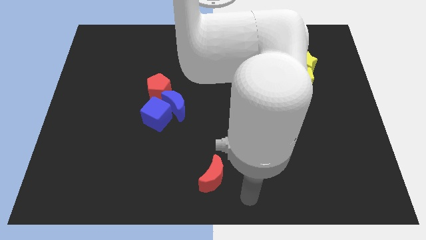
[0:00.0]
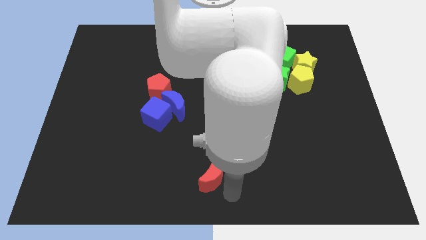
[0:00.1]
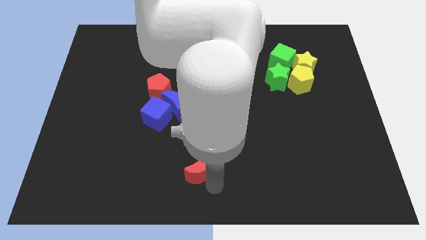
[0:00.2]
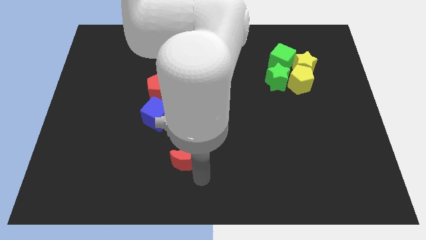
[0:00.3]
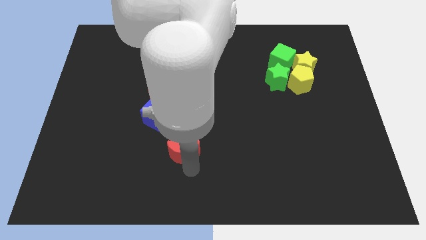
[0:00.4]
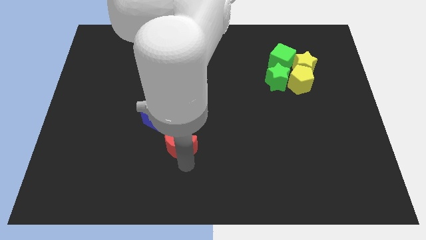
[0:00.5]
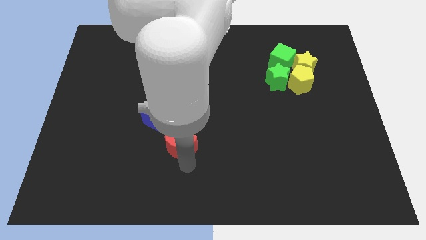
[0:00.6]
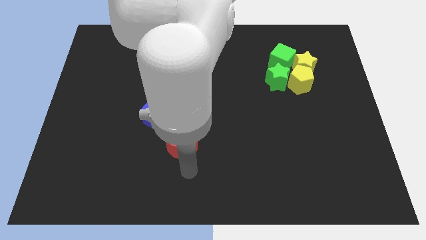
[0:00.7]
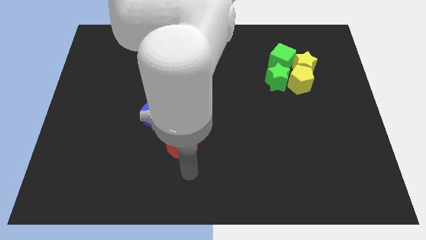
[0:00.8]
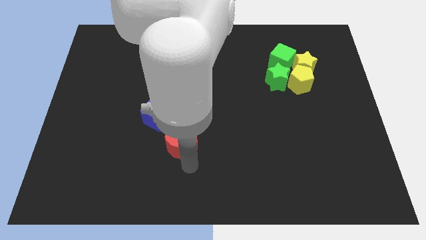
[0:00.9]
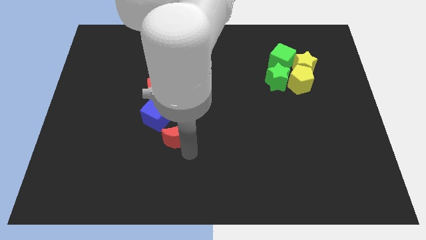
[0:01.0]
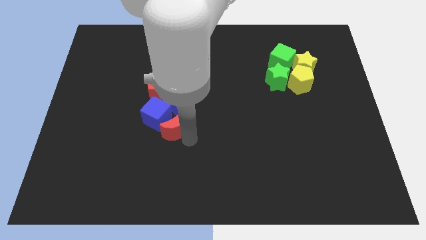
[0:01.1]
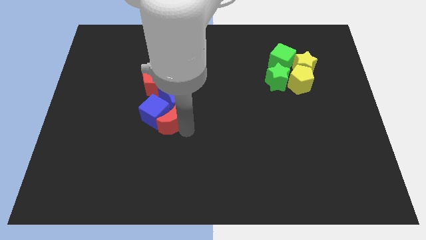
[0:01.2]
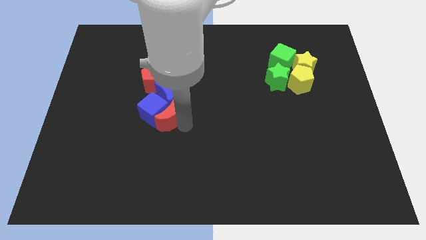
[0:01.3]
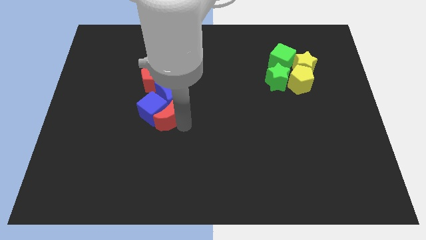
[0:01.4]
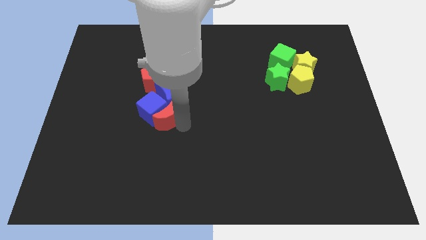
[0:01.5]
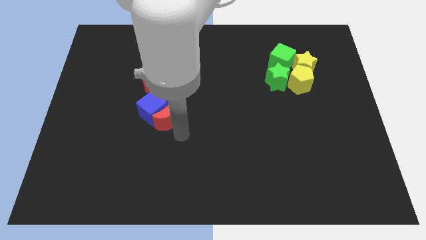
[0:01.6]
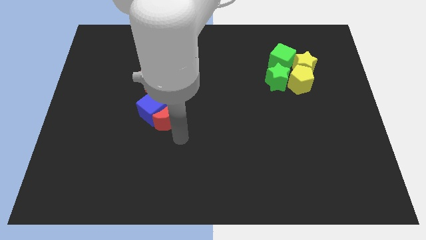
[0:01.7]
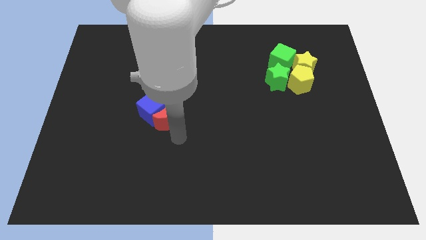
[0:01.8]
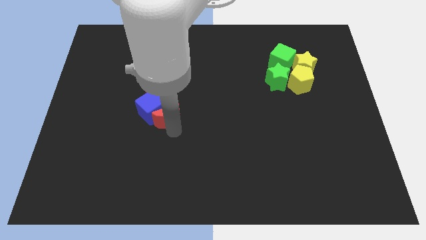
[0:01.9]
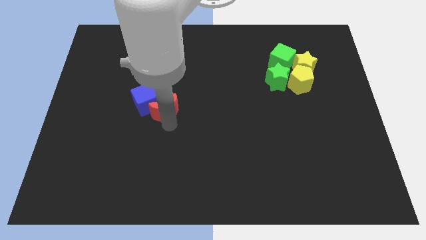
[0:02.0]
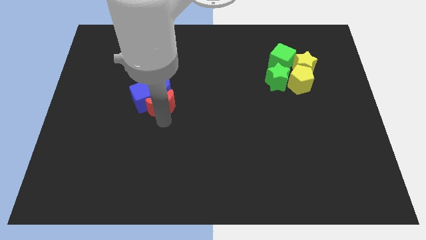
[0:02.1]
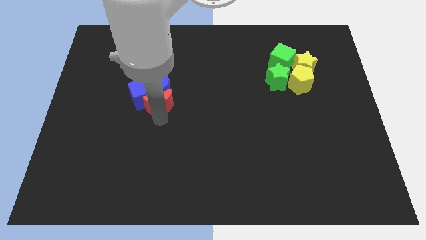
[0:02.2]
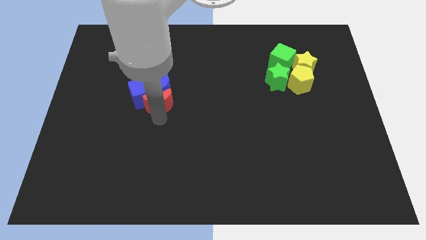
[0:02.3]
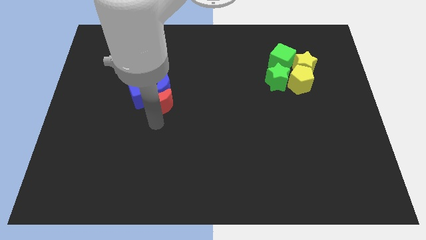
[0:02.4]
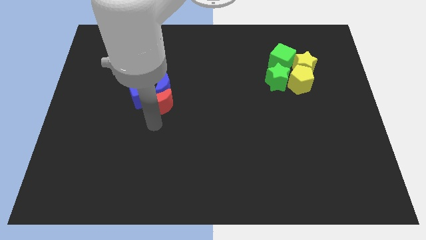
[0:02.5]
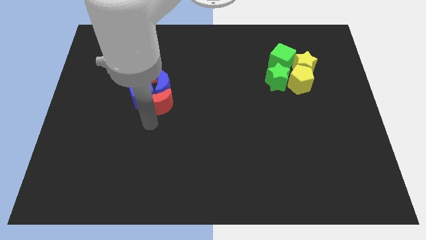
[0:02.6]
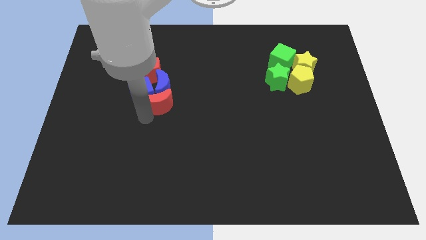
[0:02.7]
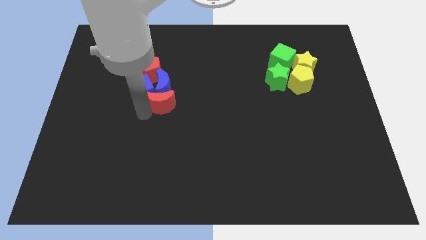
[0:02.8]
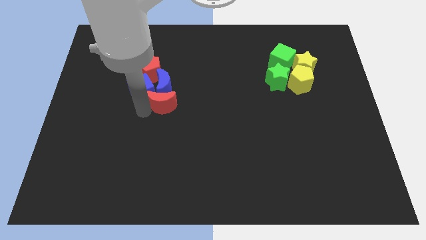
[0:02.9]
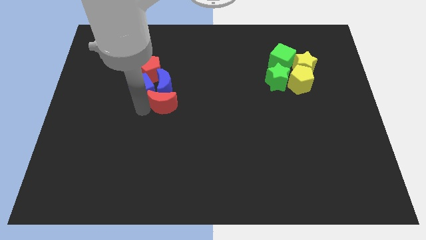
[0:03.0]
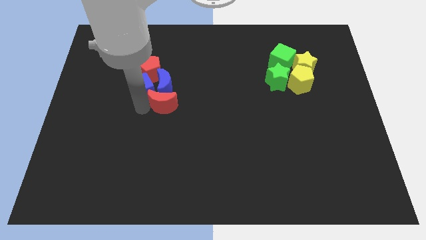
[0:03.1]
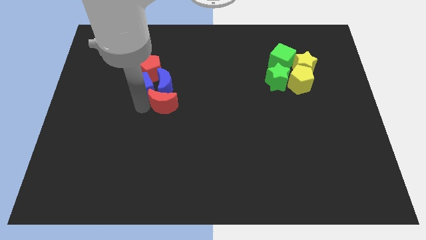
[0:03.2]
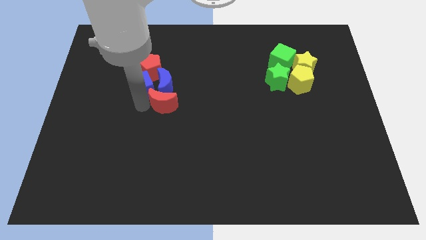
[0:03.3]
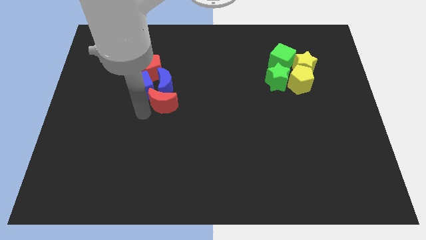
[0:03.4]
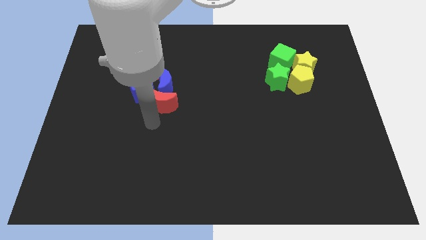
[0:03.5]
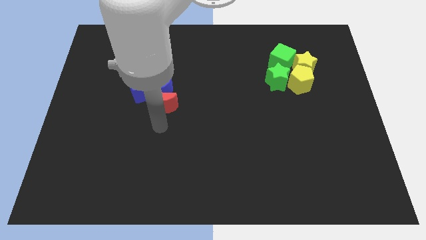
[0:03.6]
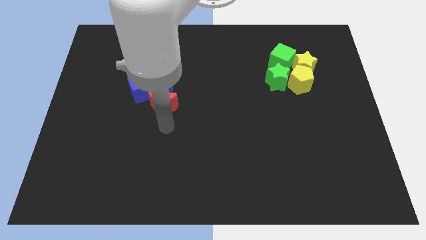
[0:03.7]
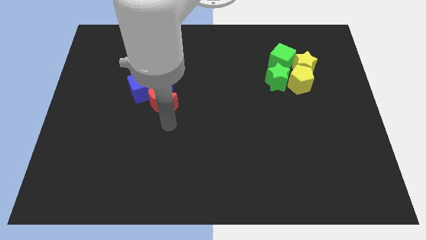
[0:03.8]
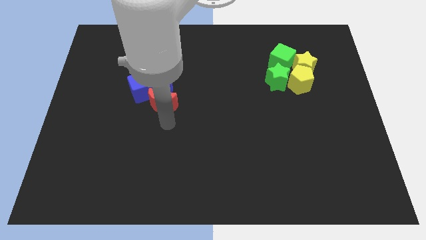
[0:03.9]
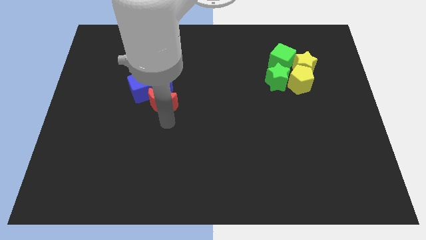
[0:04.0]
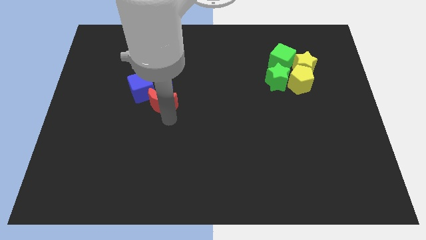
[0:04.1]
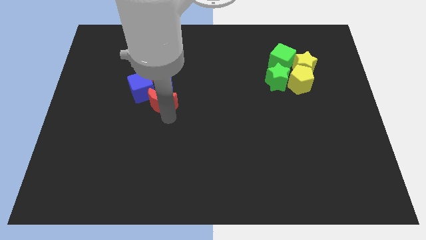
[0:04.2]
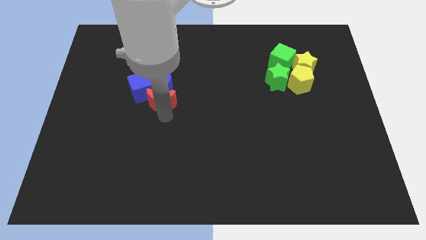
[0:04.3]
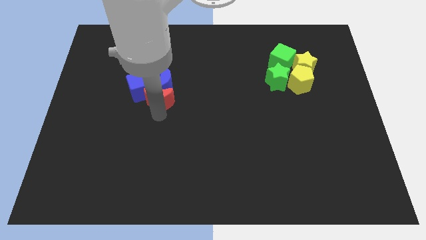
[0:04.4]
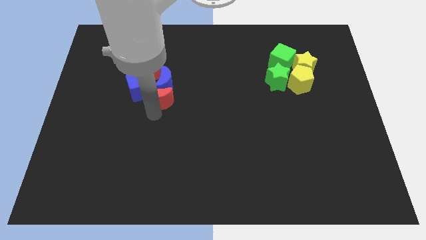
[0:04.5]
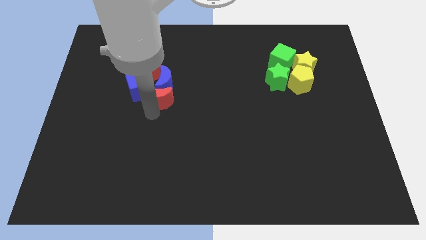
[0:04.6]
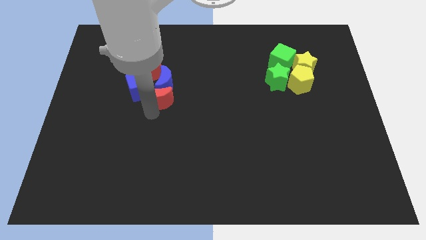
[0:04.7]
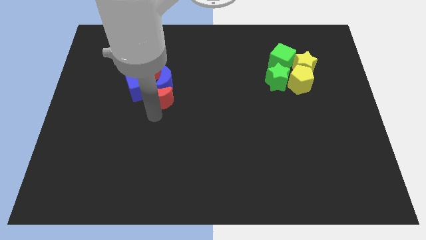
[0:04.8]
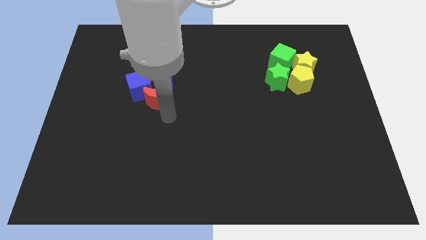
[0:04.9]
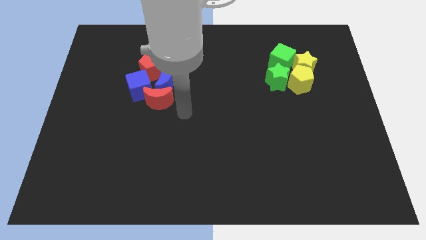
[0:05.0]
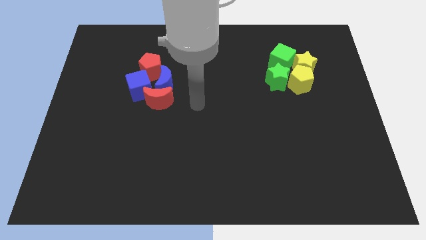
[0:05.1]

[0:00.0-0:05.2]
add the red crescent to the group of both blue blocks and red pentagon

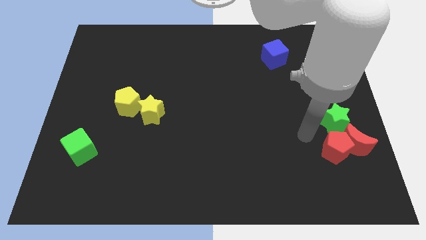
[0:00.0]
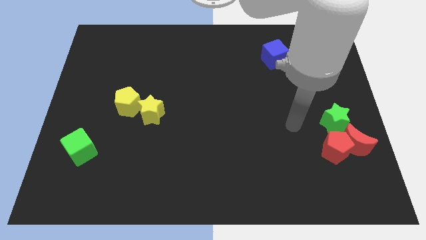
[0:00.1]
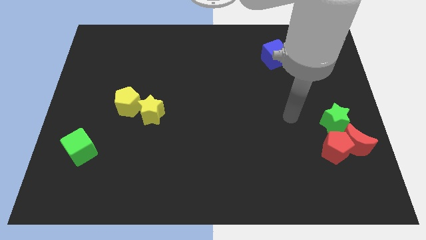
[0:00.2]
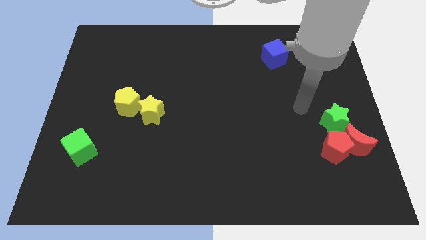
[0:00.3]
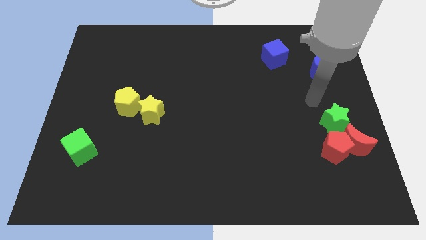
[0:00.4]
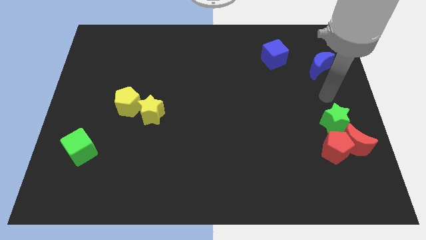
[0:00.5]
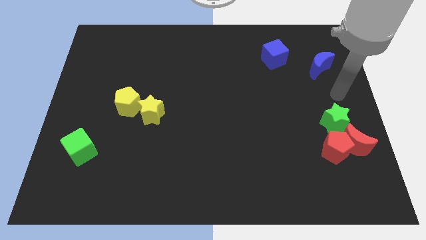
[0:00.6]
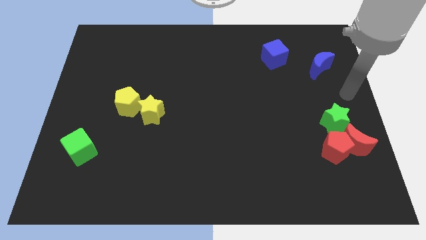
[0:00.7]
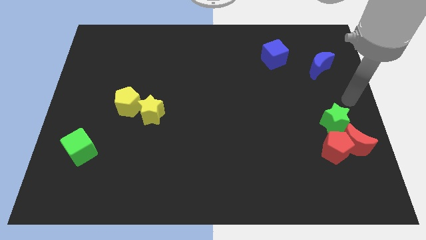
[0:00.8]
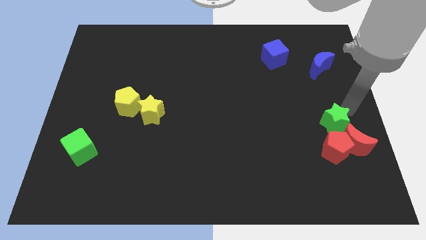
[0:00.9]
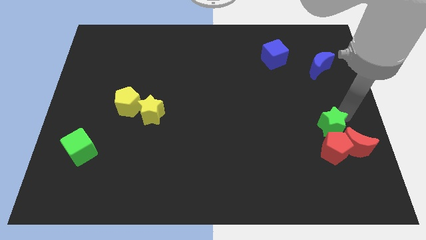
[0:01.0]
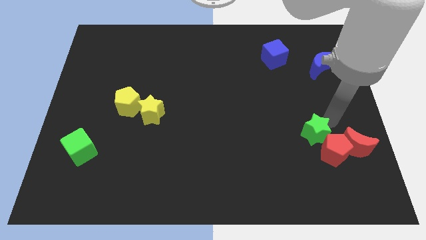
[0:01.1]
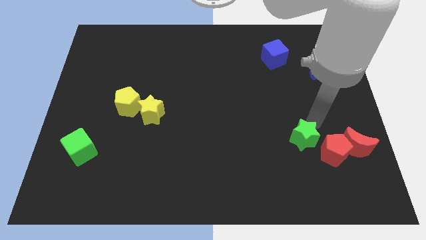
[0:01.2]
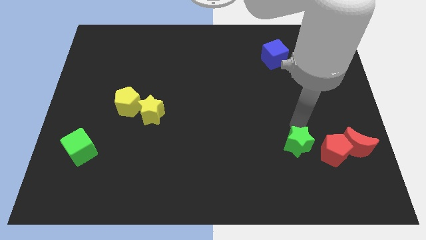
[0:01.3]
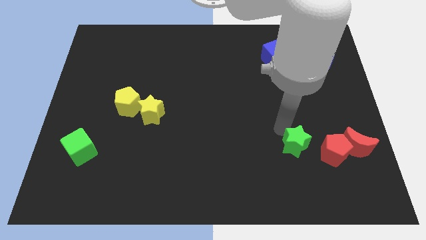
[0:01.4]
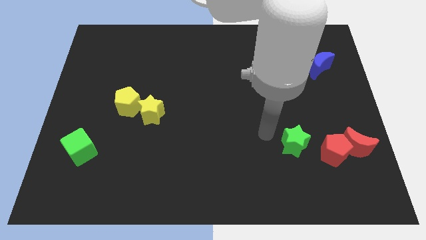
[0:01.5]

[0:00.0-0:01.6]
separate the green star from red blocks

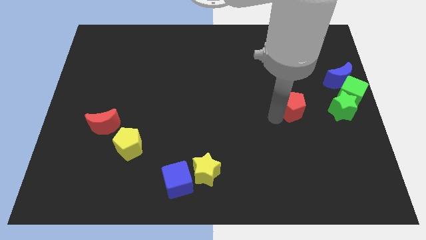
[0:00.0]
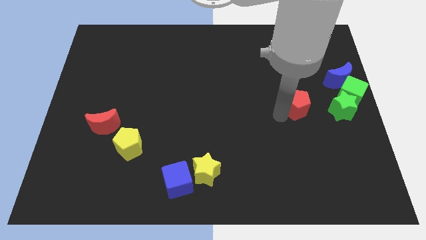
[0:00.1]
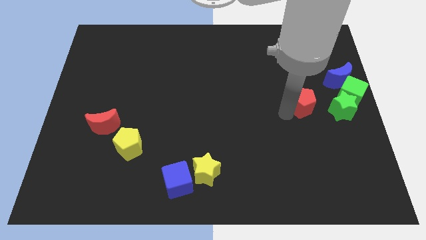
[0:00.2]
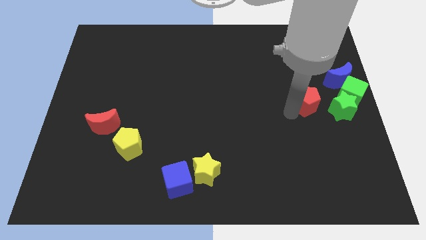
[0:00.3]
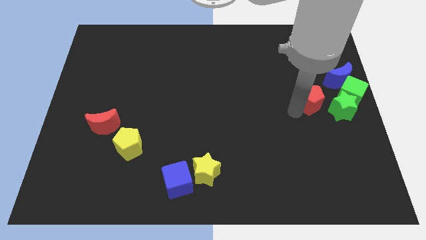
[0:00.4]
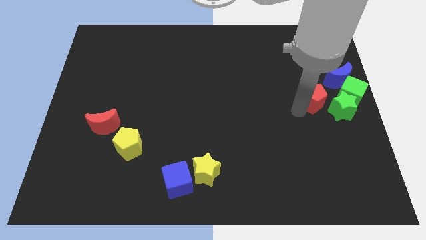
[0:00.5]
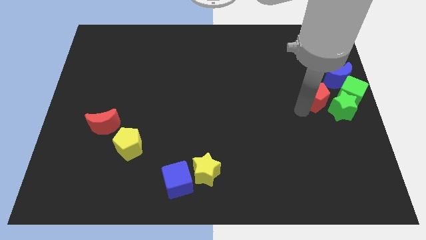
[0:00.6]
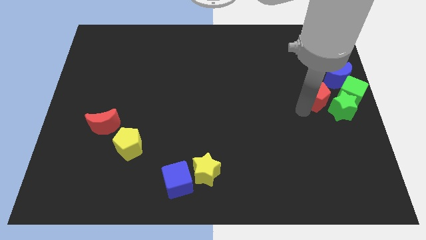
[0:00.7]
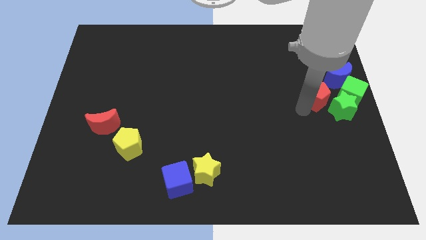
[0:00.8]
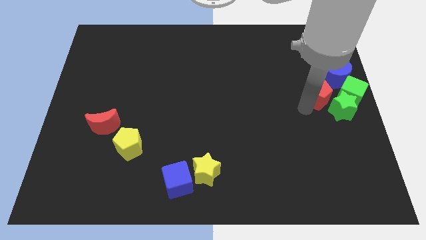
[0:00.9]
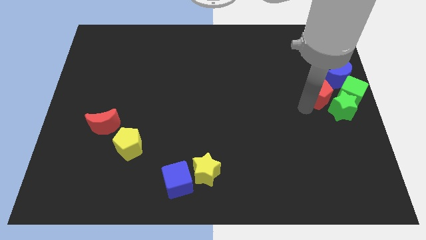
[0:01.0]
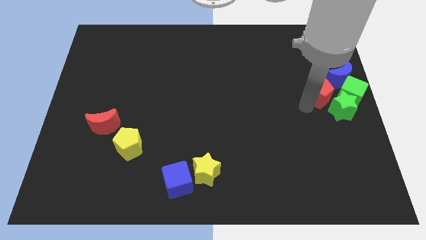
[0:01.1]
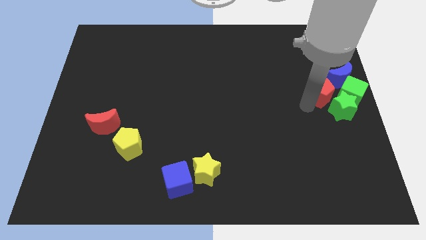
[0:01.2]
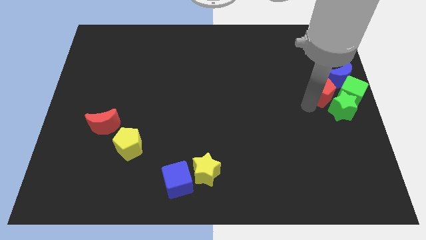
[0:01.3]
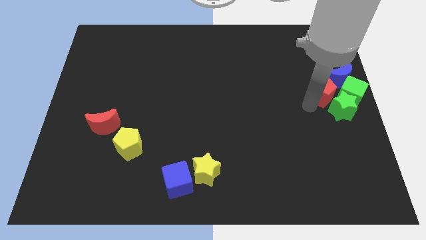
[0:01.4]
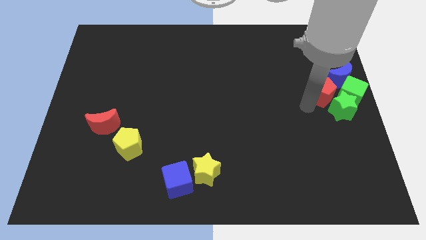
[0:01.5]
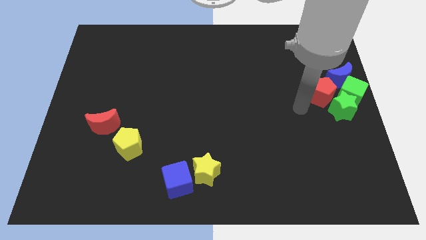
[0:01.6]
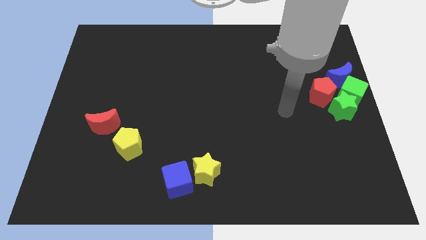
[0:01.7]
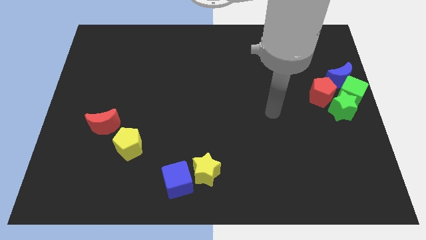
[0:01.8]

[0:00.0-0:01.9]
push the red pentagon to the left of the green cube

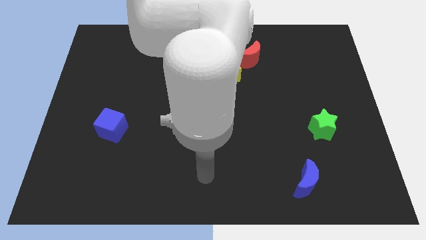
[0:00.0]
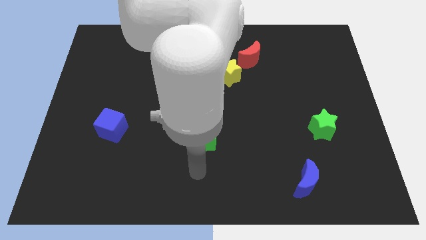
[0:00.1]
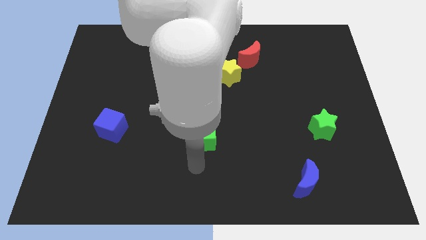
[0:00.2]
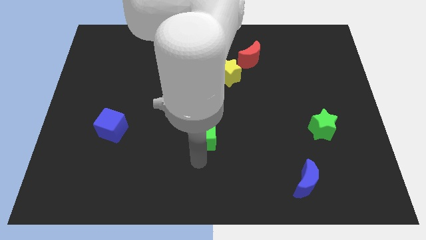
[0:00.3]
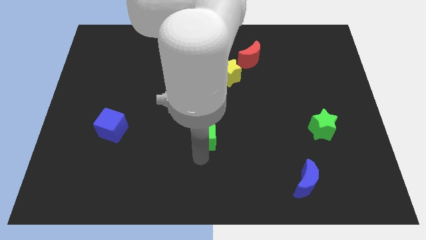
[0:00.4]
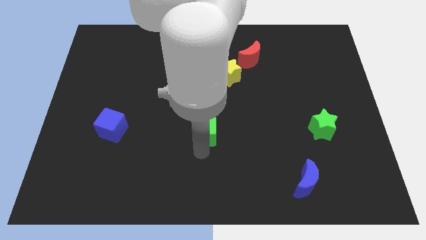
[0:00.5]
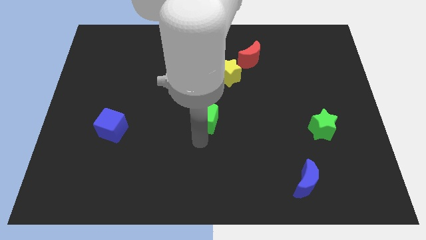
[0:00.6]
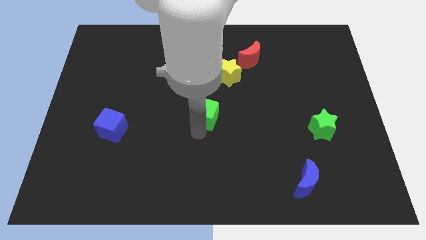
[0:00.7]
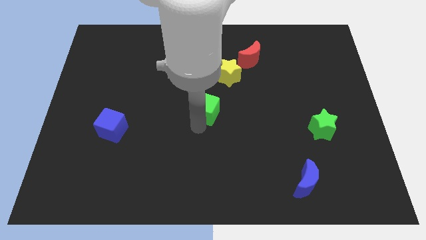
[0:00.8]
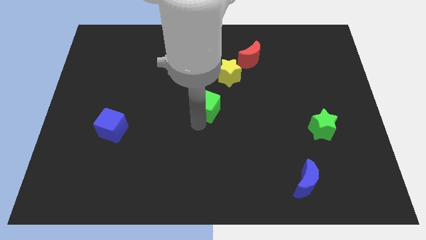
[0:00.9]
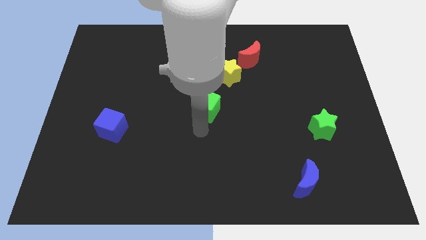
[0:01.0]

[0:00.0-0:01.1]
drag the green cube upwards
